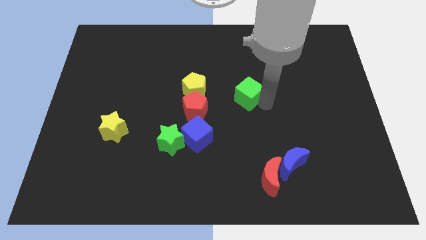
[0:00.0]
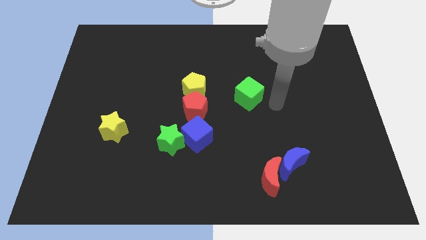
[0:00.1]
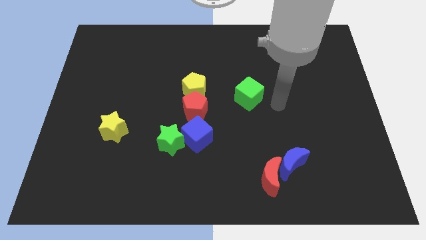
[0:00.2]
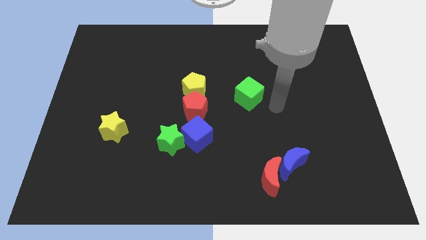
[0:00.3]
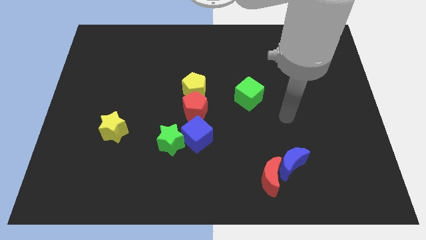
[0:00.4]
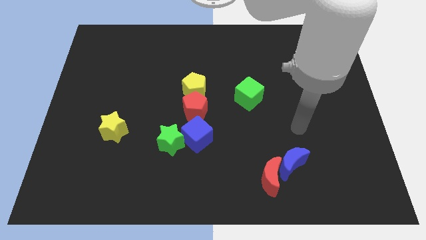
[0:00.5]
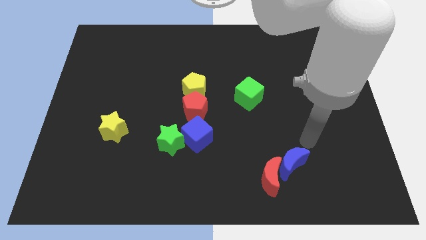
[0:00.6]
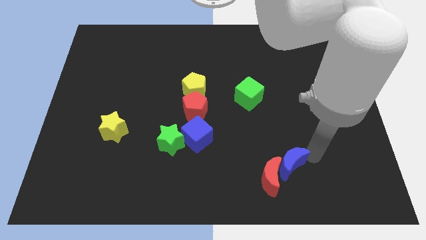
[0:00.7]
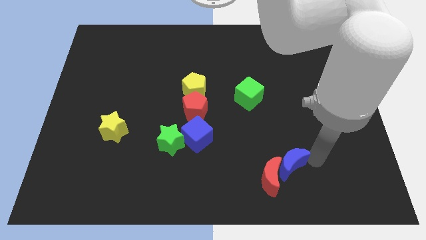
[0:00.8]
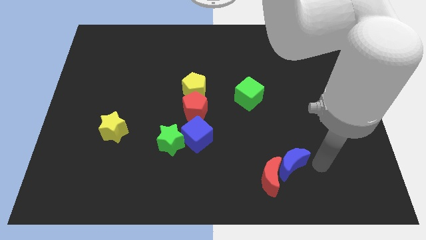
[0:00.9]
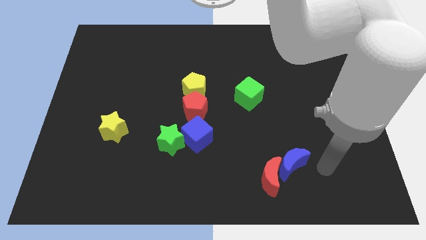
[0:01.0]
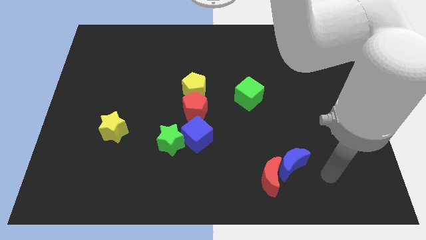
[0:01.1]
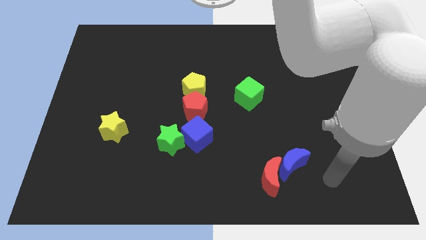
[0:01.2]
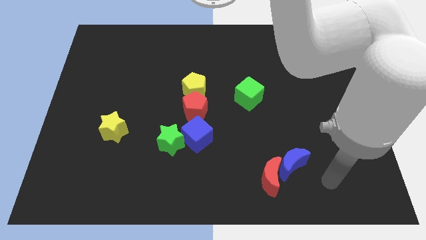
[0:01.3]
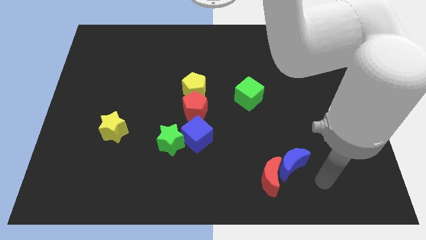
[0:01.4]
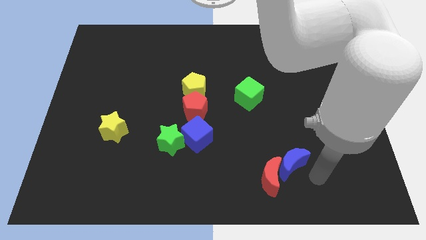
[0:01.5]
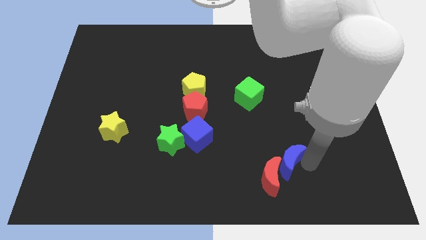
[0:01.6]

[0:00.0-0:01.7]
move your arm towards the blue crescent

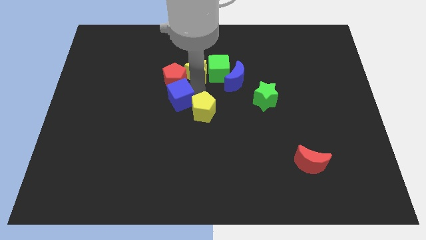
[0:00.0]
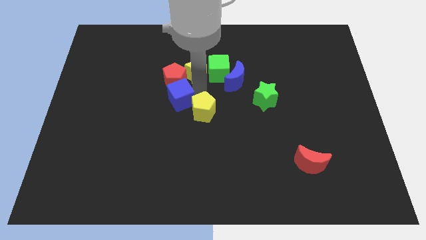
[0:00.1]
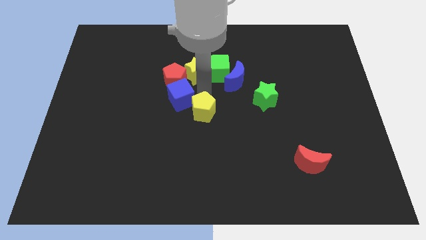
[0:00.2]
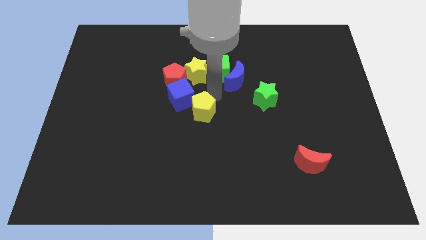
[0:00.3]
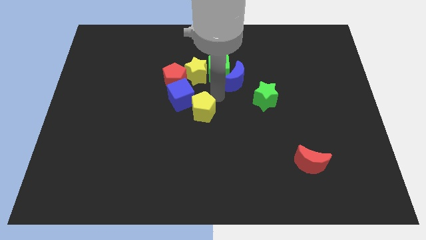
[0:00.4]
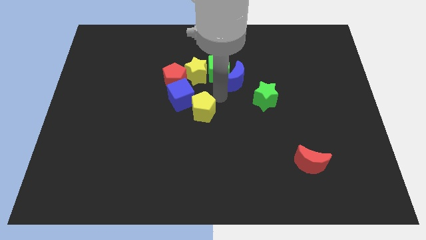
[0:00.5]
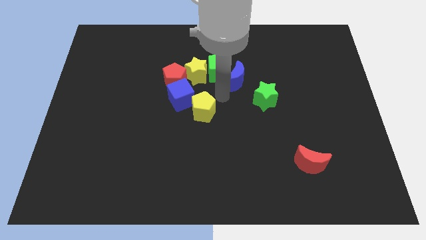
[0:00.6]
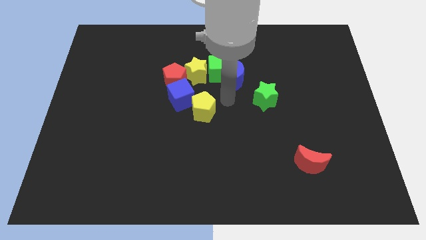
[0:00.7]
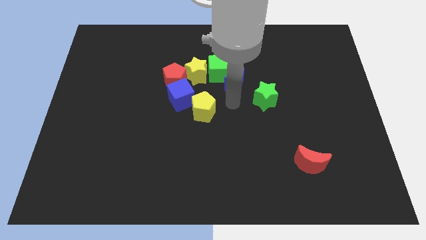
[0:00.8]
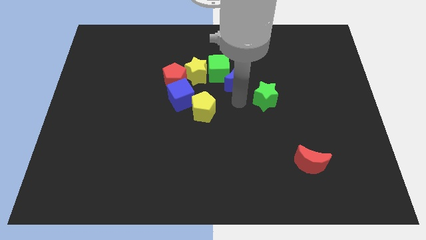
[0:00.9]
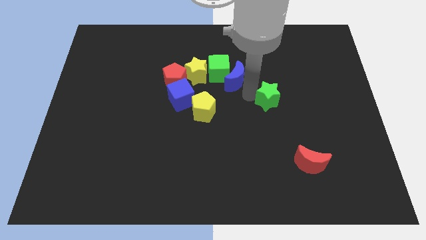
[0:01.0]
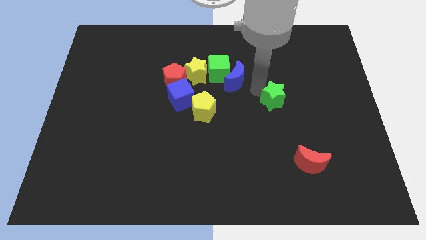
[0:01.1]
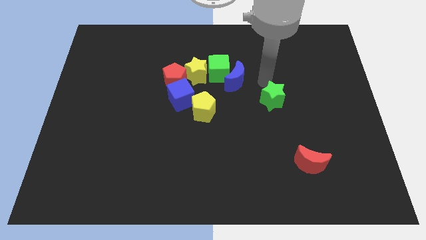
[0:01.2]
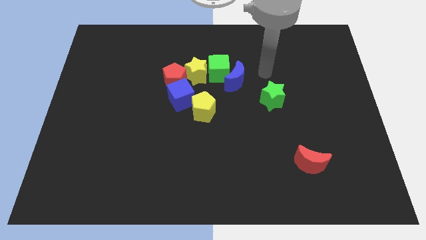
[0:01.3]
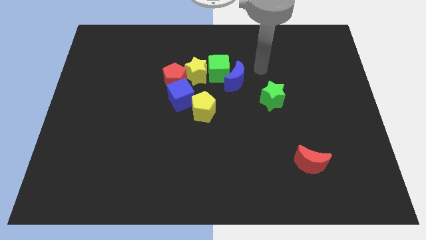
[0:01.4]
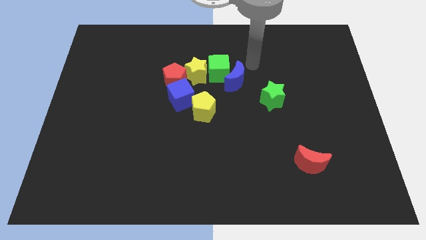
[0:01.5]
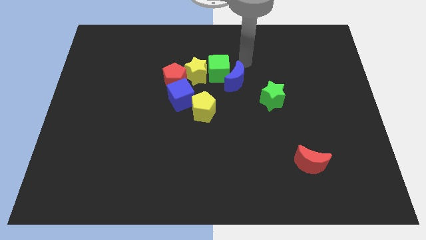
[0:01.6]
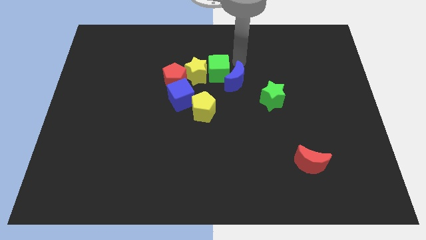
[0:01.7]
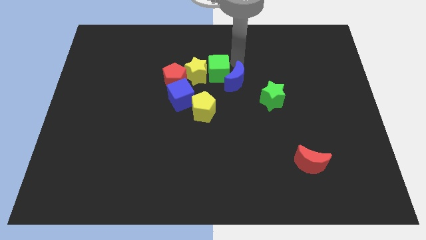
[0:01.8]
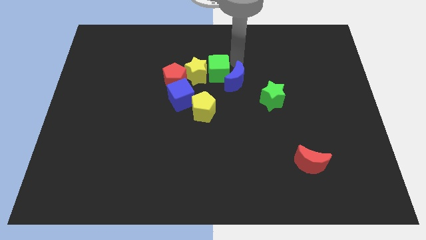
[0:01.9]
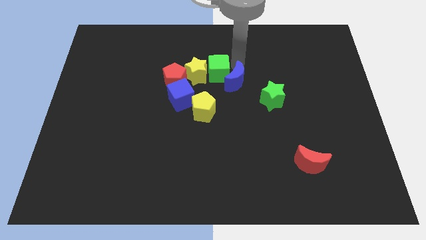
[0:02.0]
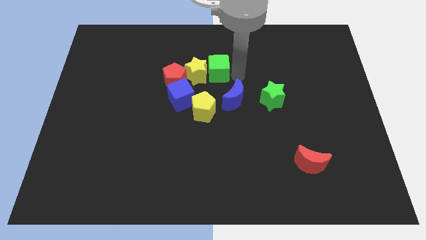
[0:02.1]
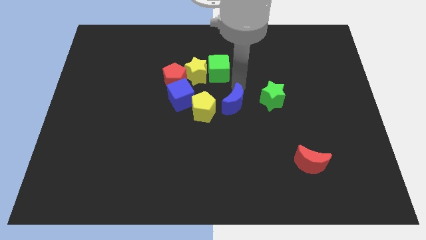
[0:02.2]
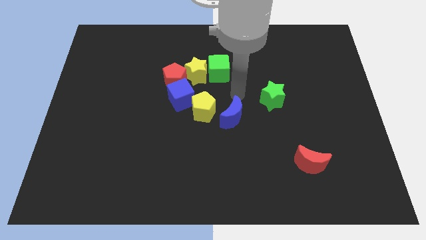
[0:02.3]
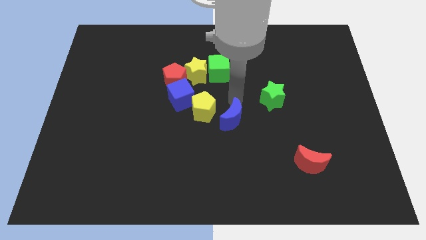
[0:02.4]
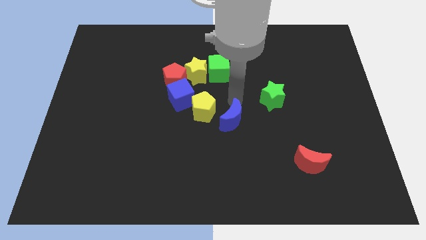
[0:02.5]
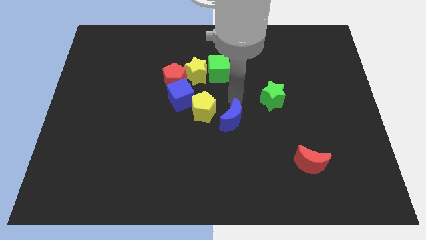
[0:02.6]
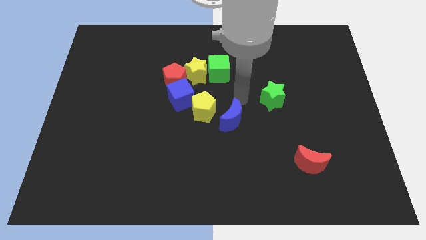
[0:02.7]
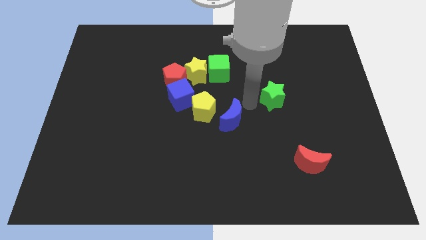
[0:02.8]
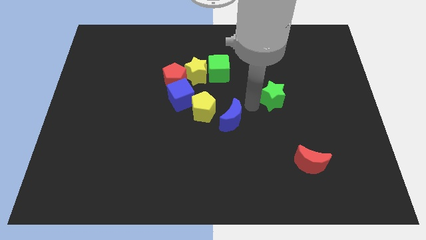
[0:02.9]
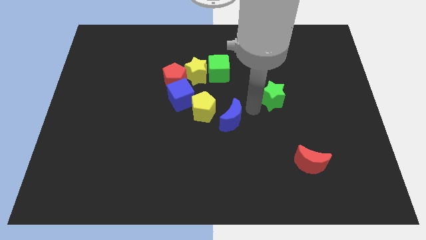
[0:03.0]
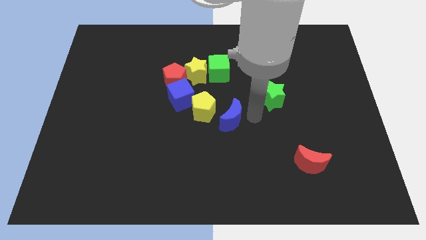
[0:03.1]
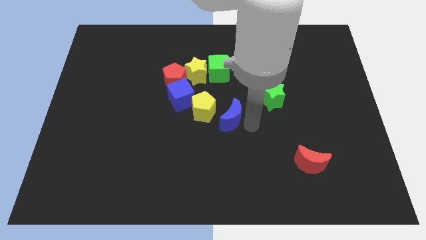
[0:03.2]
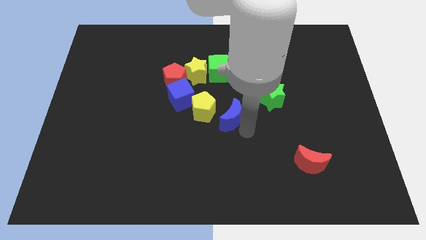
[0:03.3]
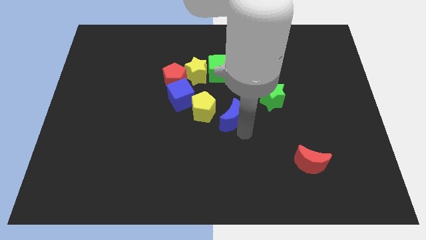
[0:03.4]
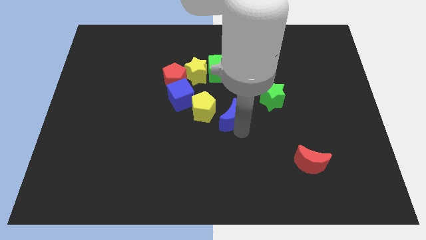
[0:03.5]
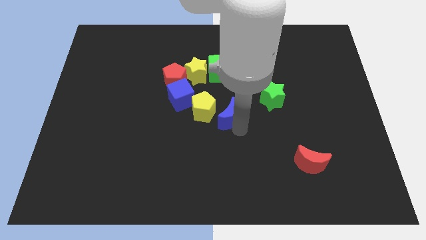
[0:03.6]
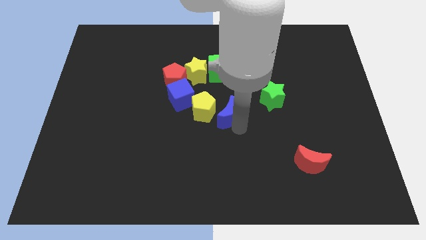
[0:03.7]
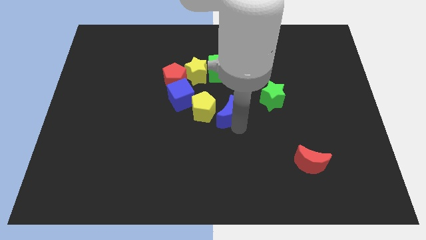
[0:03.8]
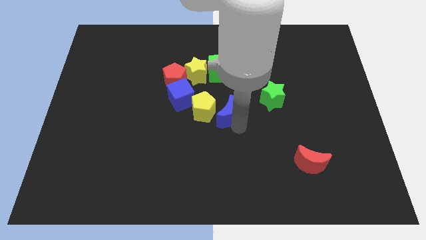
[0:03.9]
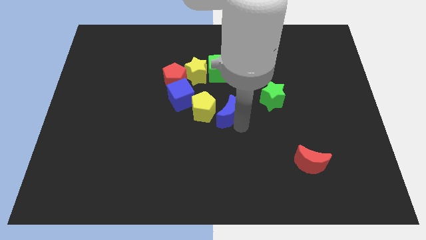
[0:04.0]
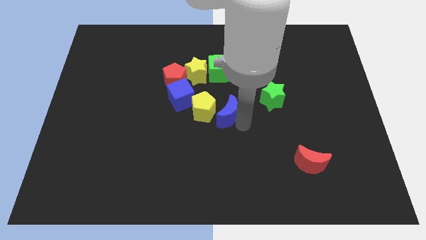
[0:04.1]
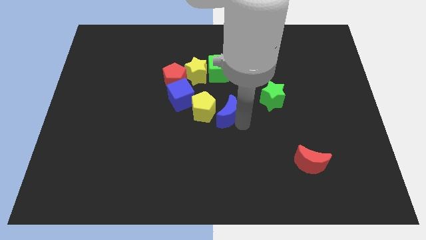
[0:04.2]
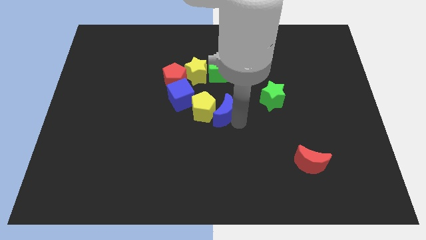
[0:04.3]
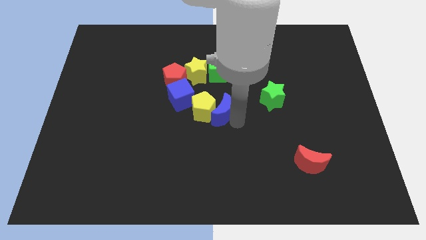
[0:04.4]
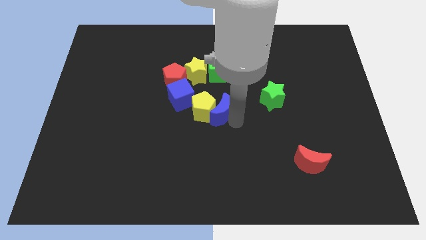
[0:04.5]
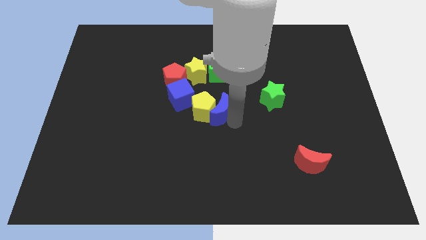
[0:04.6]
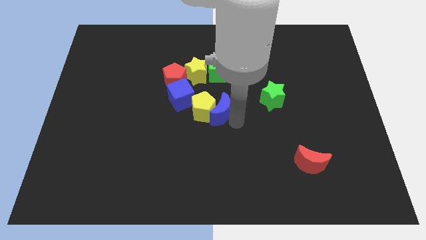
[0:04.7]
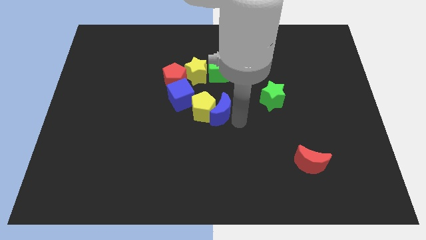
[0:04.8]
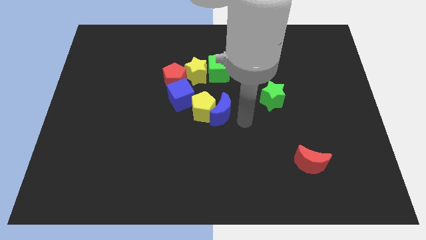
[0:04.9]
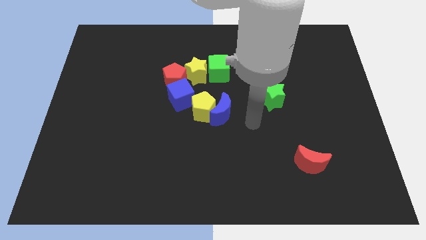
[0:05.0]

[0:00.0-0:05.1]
place the blue moon vertically below the green cube

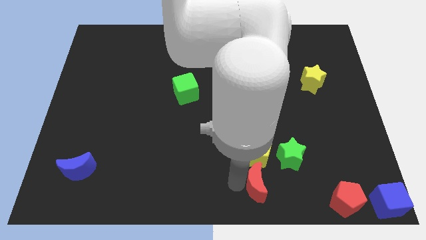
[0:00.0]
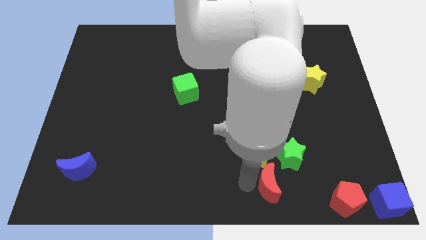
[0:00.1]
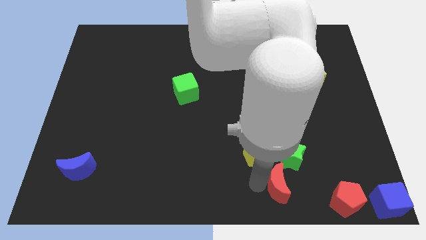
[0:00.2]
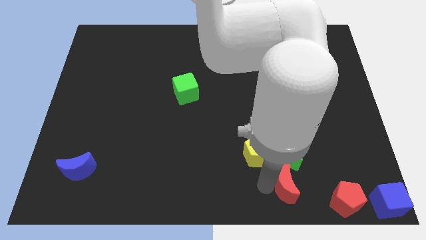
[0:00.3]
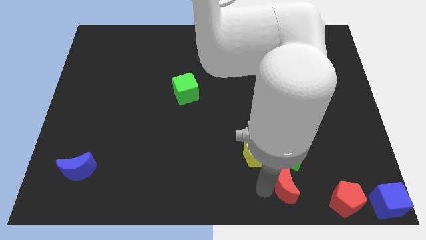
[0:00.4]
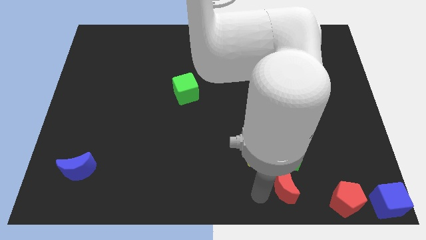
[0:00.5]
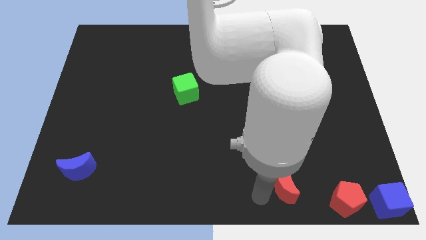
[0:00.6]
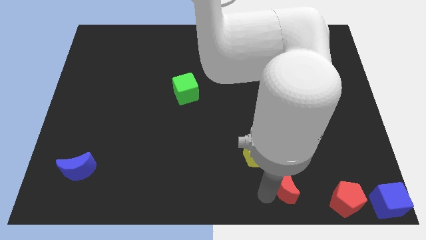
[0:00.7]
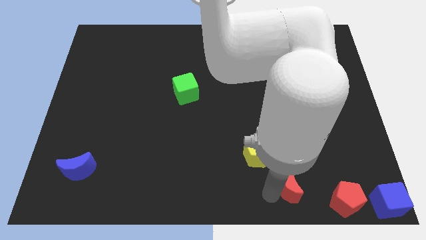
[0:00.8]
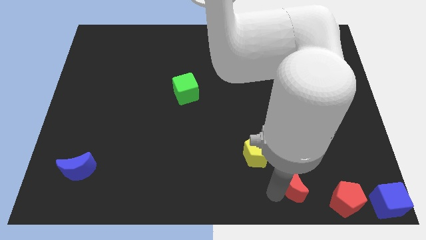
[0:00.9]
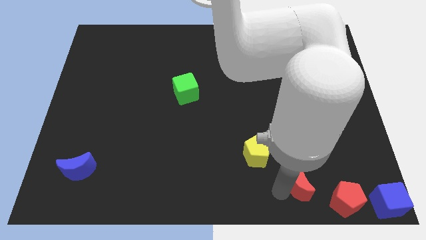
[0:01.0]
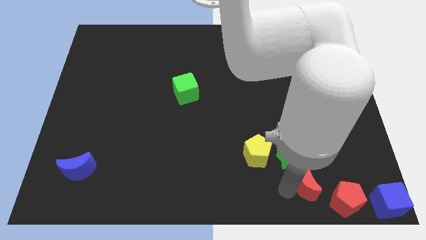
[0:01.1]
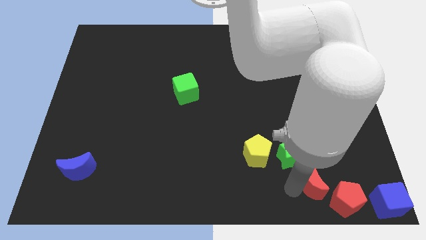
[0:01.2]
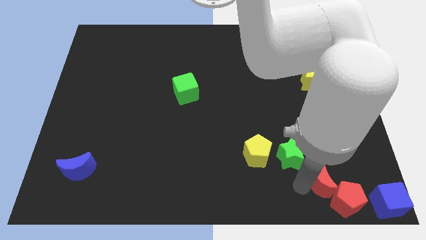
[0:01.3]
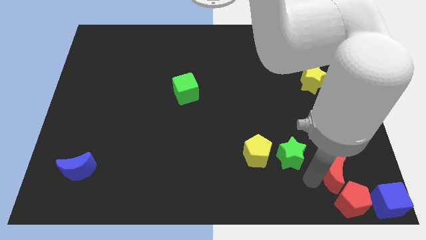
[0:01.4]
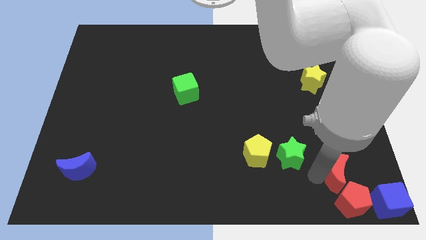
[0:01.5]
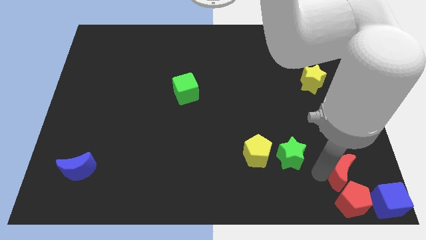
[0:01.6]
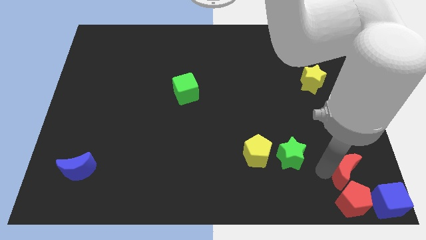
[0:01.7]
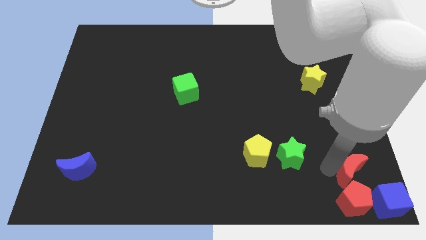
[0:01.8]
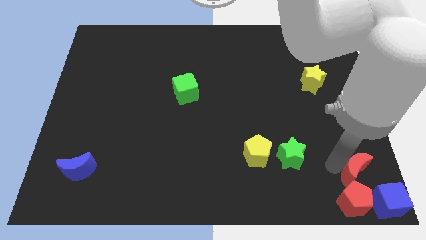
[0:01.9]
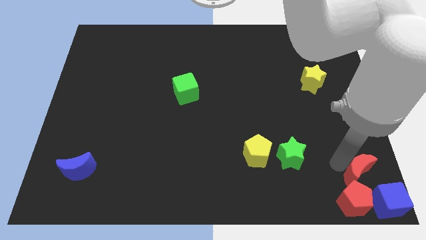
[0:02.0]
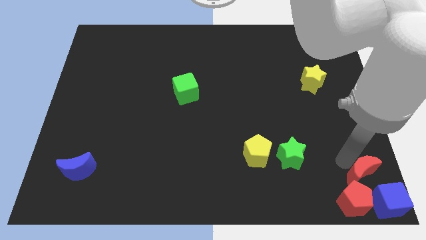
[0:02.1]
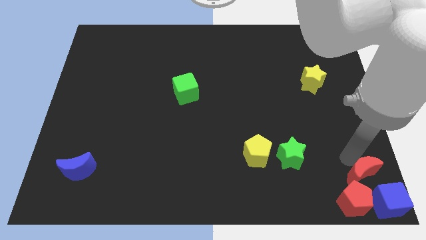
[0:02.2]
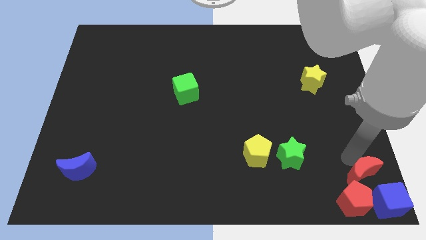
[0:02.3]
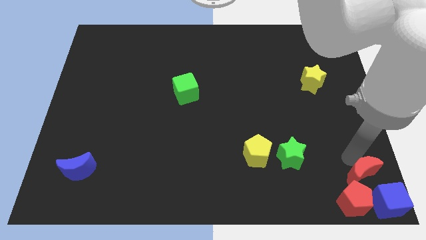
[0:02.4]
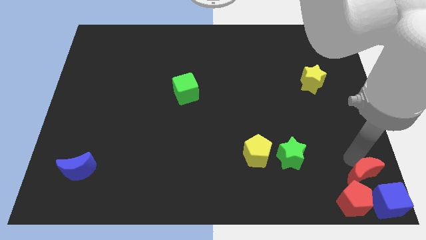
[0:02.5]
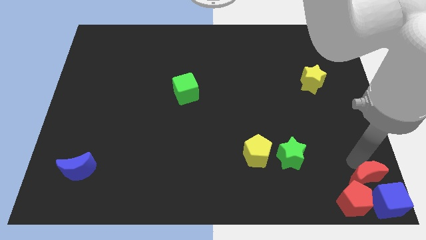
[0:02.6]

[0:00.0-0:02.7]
move the red crescent to the top of the red pentagon
